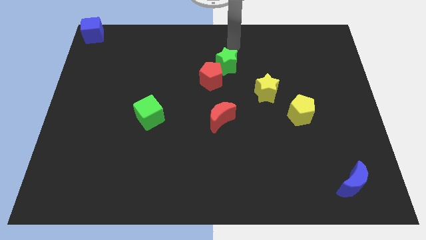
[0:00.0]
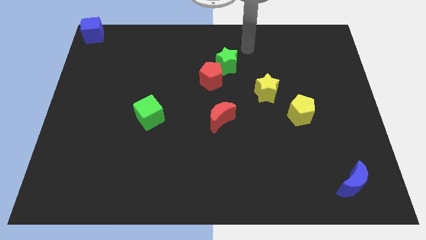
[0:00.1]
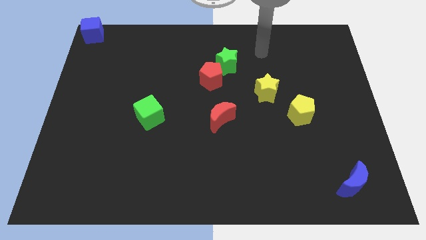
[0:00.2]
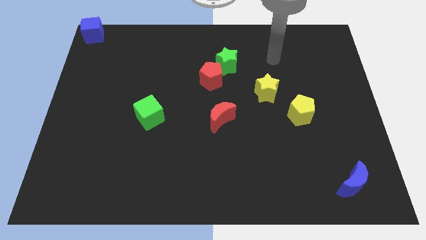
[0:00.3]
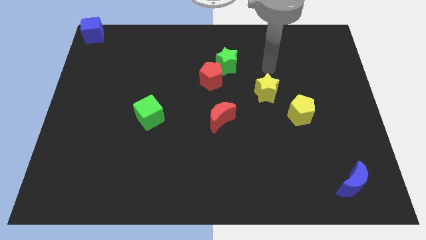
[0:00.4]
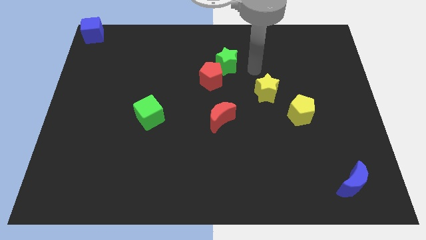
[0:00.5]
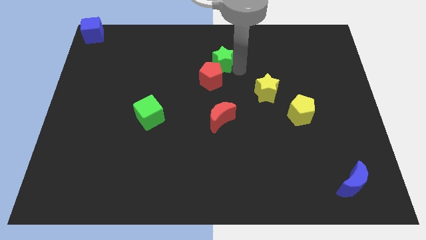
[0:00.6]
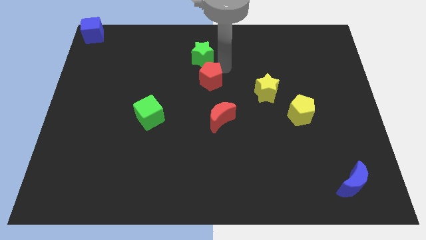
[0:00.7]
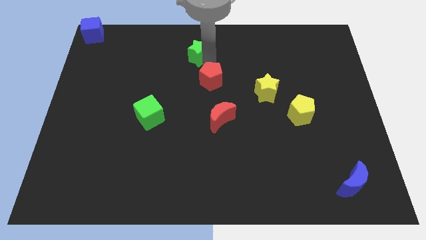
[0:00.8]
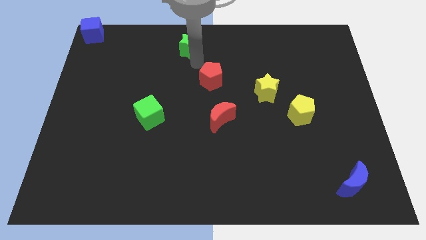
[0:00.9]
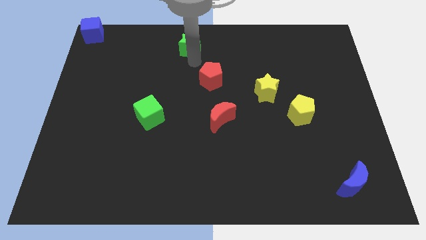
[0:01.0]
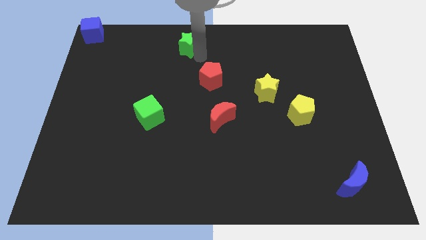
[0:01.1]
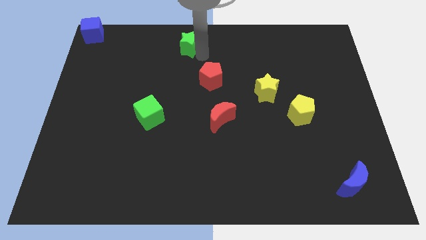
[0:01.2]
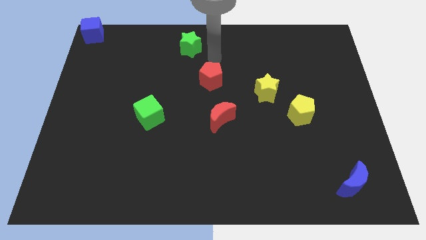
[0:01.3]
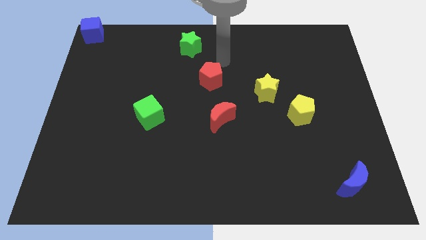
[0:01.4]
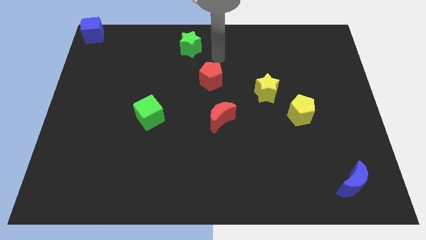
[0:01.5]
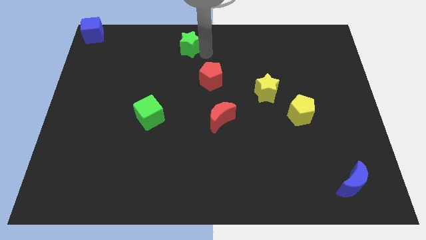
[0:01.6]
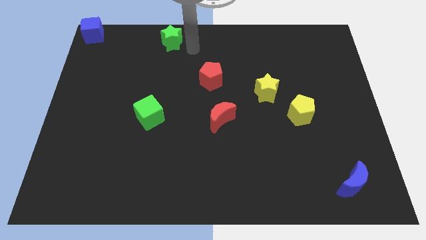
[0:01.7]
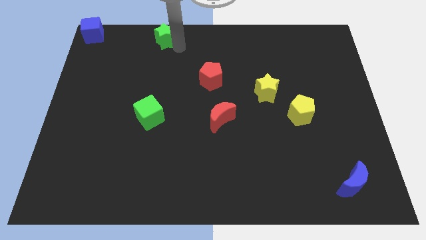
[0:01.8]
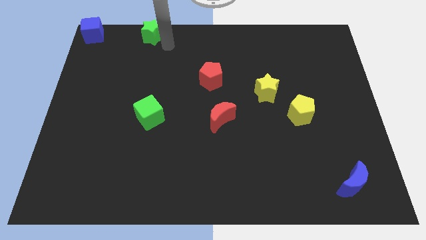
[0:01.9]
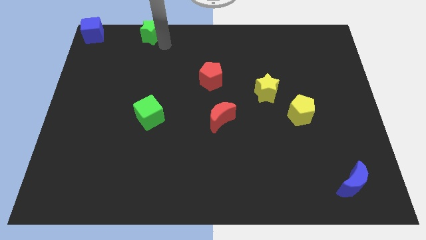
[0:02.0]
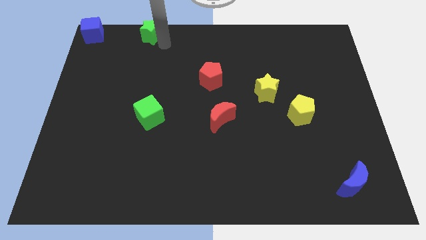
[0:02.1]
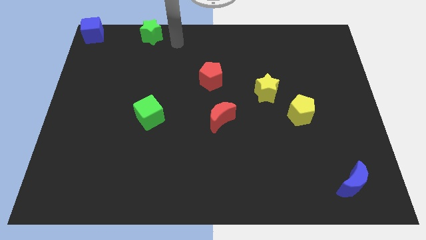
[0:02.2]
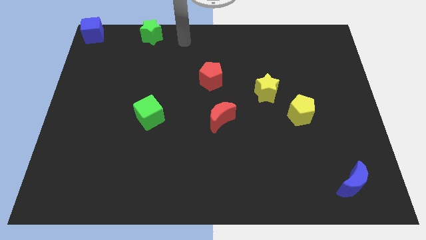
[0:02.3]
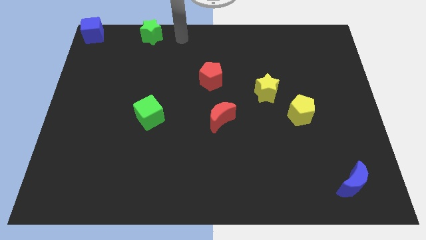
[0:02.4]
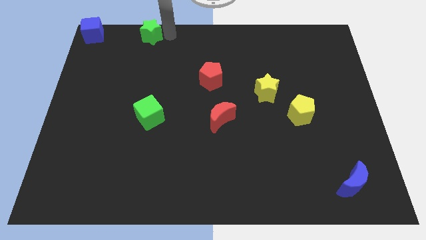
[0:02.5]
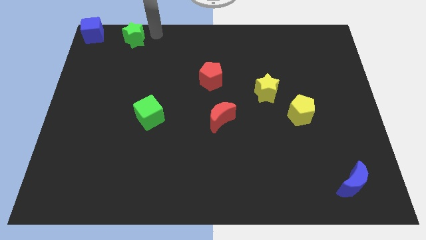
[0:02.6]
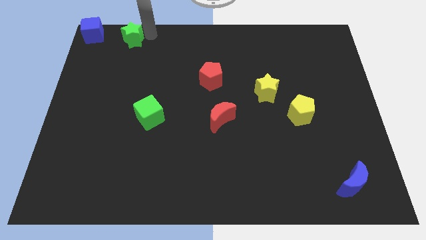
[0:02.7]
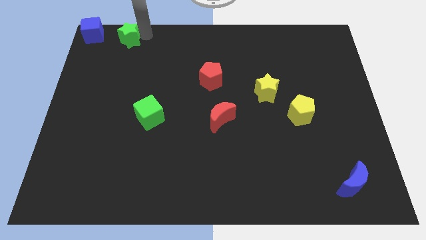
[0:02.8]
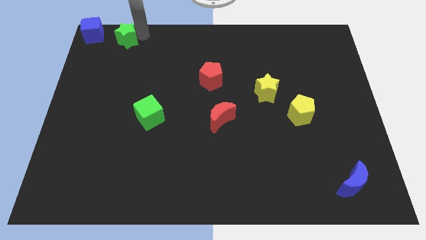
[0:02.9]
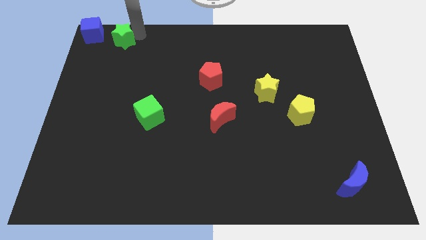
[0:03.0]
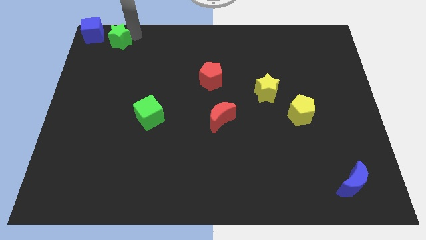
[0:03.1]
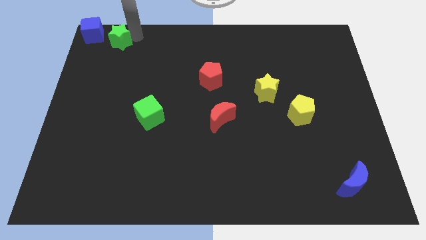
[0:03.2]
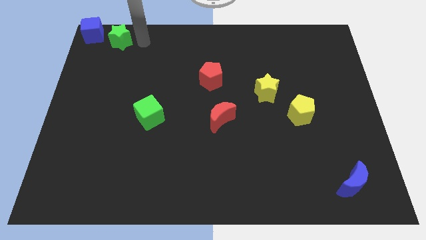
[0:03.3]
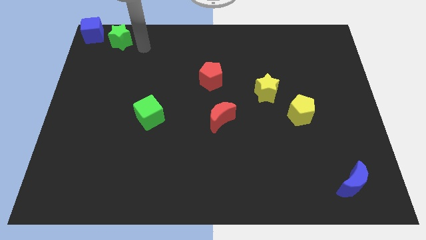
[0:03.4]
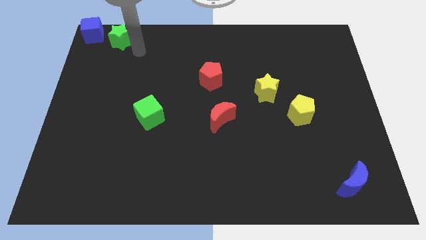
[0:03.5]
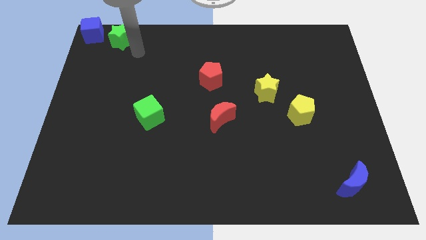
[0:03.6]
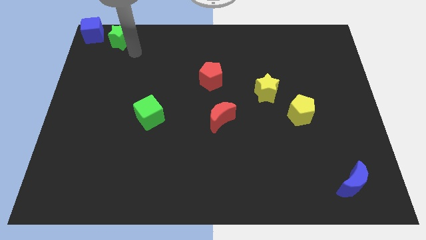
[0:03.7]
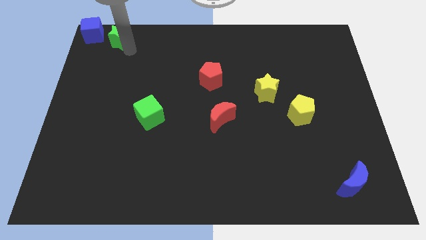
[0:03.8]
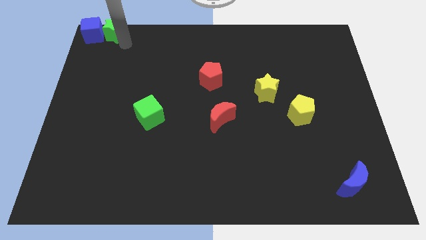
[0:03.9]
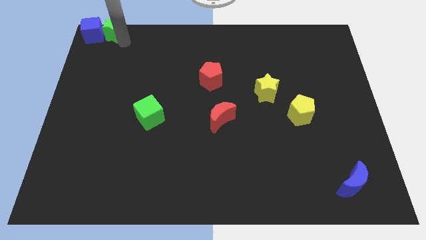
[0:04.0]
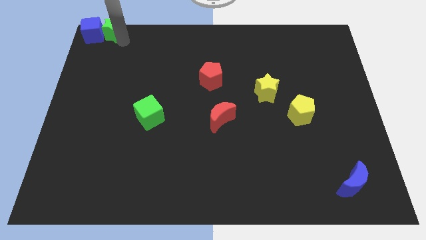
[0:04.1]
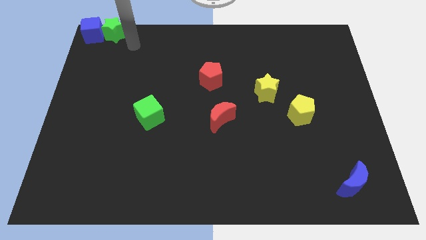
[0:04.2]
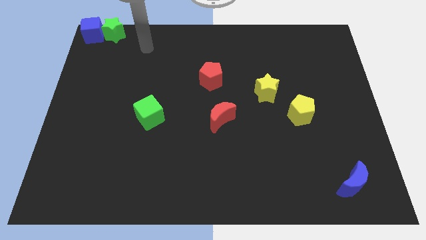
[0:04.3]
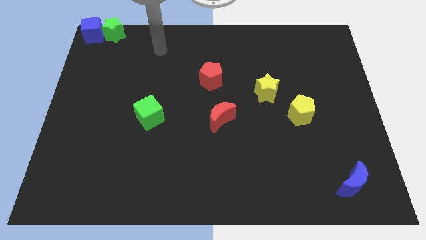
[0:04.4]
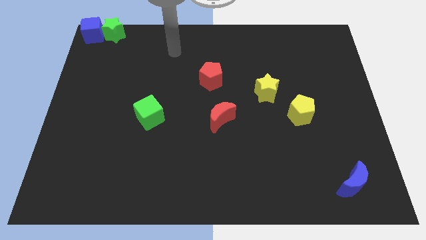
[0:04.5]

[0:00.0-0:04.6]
push the green star into the blue cube

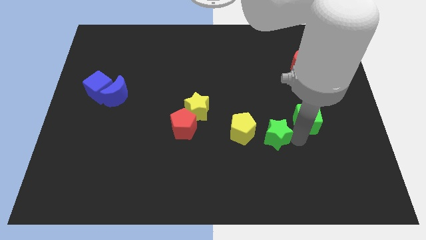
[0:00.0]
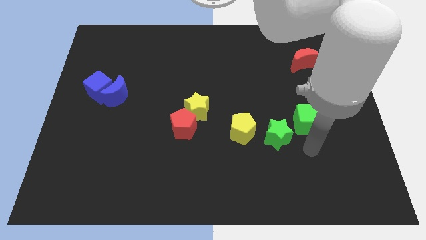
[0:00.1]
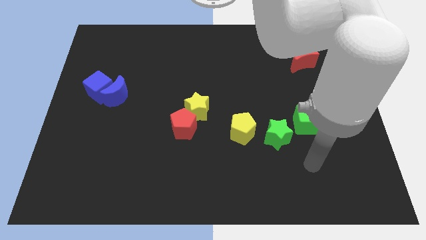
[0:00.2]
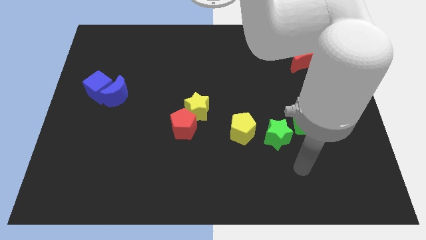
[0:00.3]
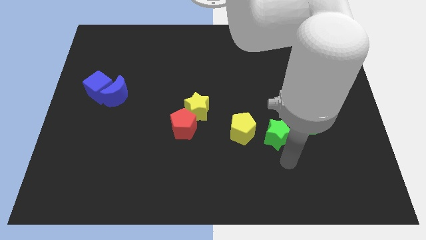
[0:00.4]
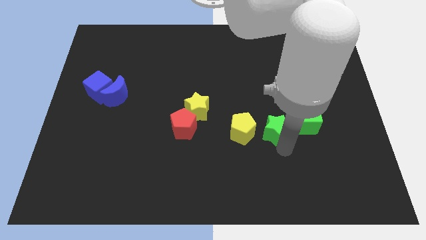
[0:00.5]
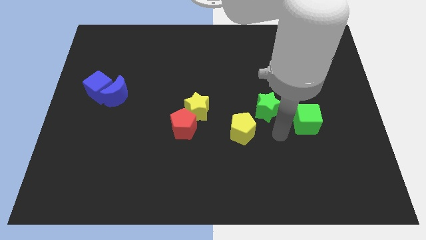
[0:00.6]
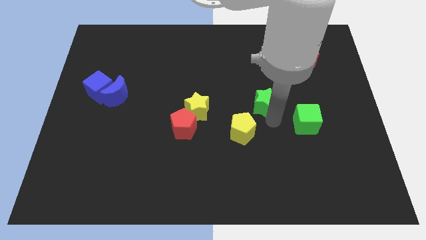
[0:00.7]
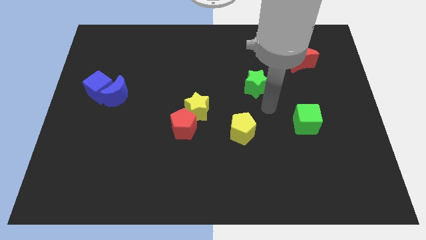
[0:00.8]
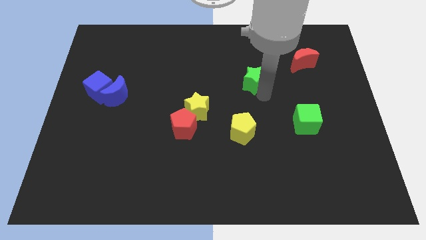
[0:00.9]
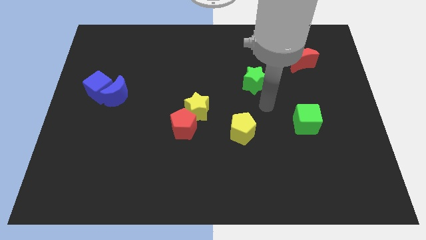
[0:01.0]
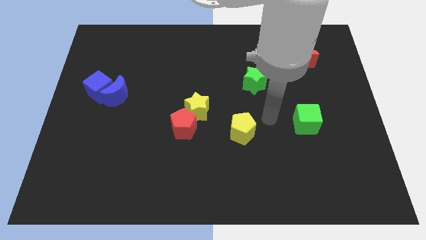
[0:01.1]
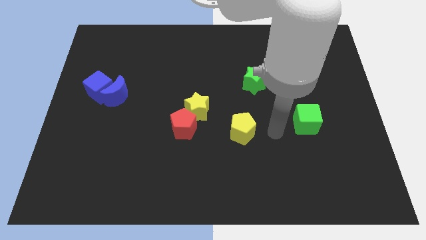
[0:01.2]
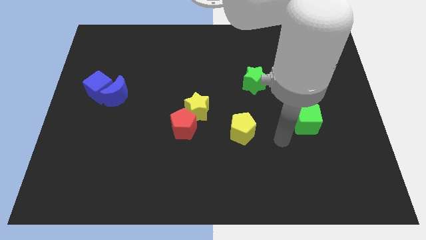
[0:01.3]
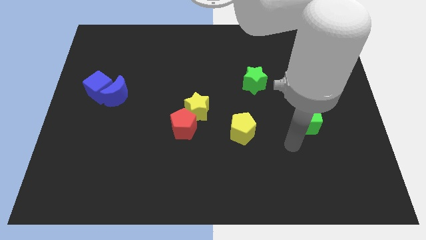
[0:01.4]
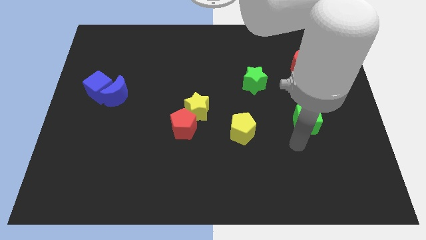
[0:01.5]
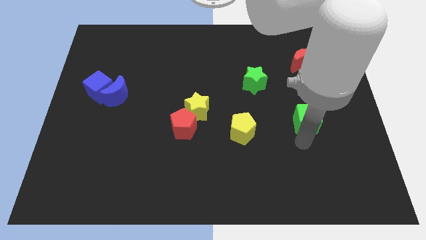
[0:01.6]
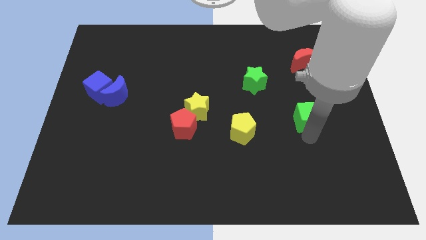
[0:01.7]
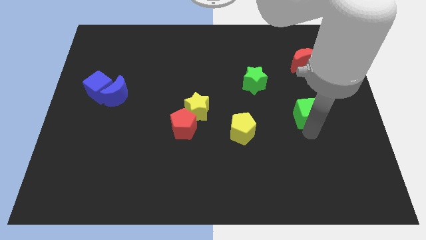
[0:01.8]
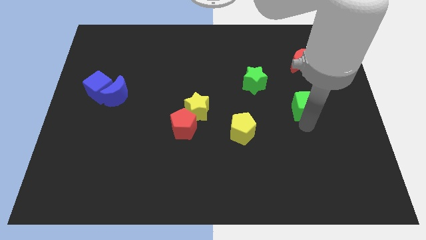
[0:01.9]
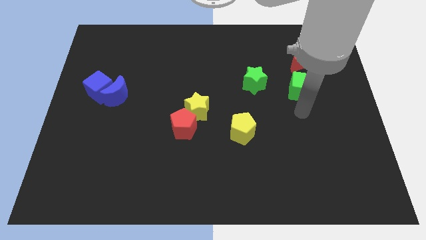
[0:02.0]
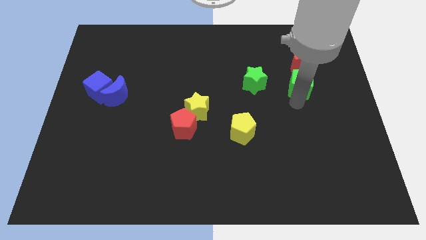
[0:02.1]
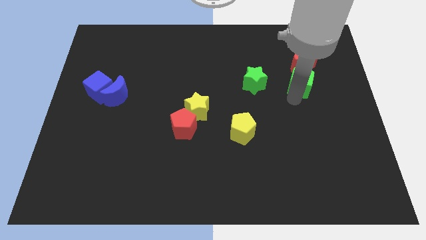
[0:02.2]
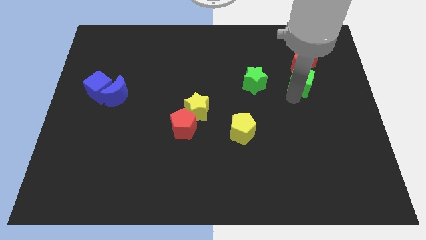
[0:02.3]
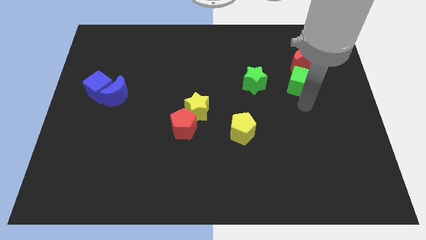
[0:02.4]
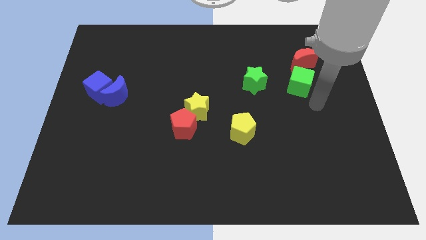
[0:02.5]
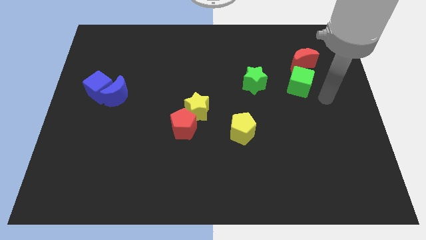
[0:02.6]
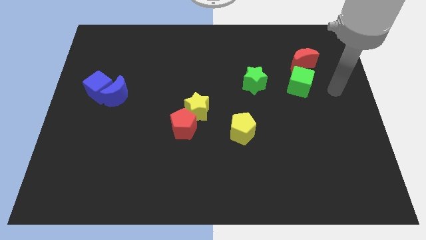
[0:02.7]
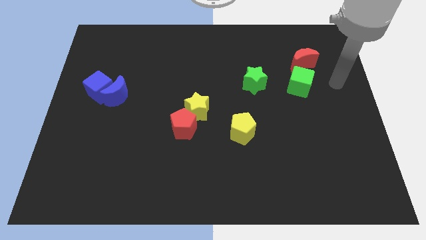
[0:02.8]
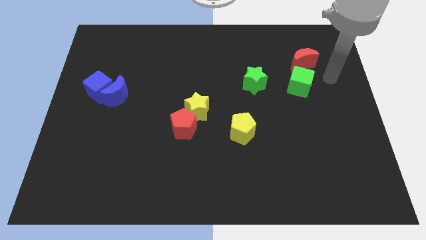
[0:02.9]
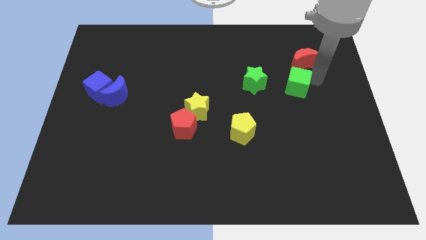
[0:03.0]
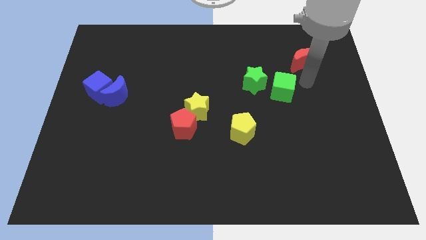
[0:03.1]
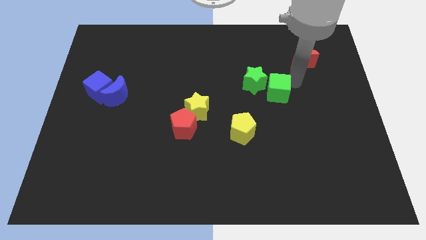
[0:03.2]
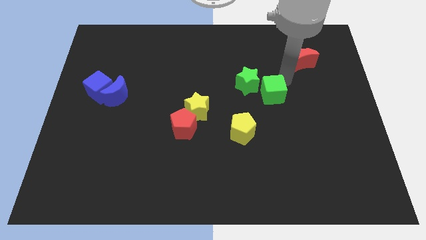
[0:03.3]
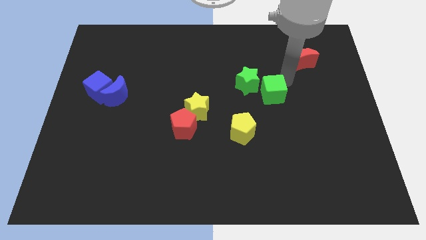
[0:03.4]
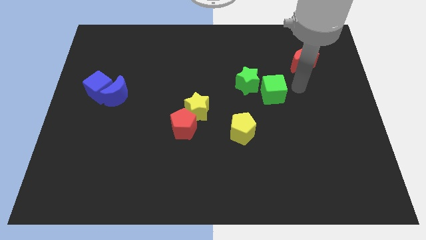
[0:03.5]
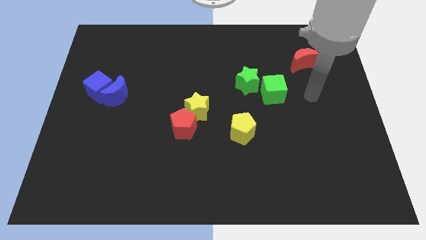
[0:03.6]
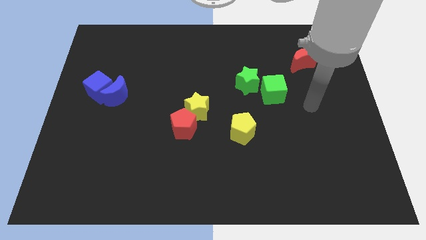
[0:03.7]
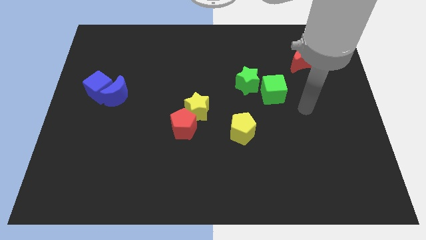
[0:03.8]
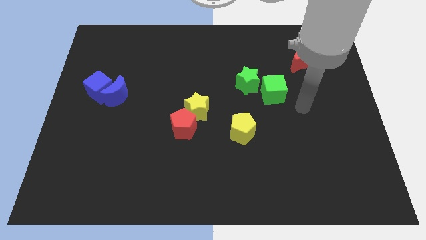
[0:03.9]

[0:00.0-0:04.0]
place green cube to the bottom right of the green star

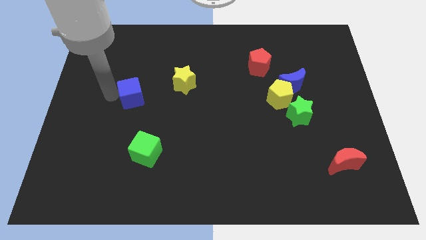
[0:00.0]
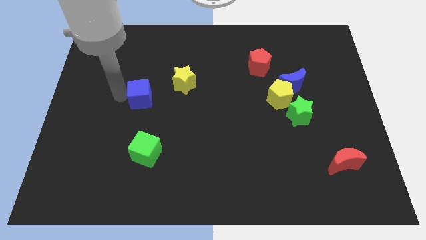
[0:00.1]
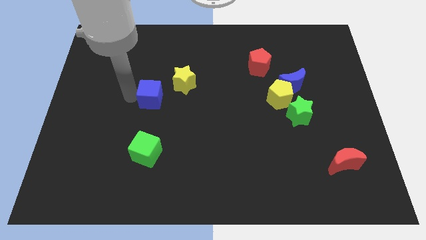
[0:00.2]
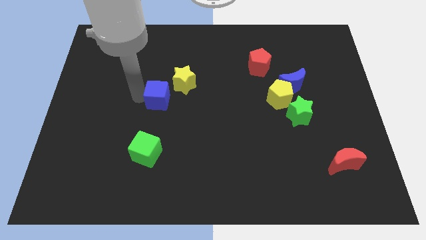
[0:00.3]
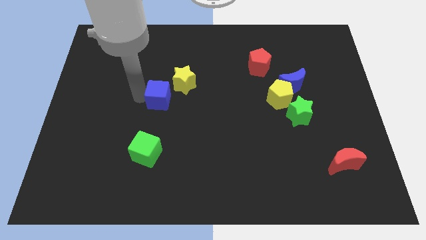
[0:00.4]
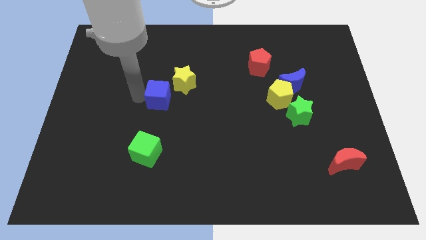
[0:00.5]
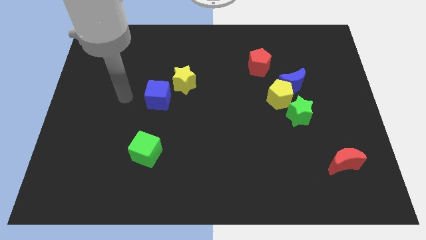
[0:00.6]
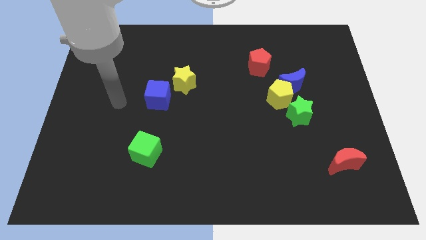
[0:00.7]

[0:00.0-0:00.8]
place blue cube to the bottom left of yellow star
